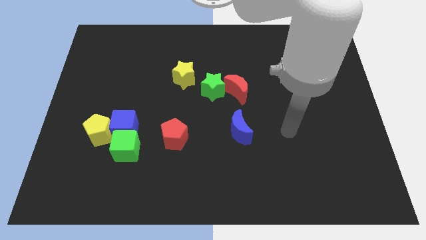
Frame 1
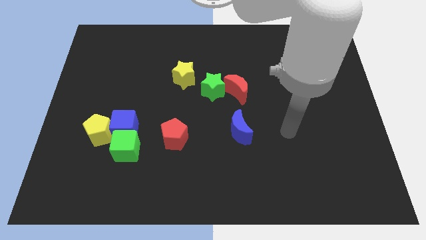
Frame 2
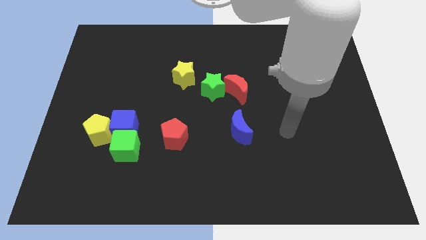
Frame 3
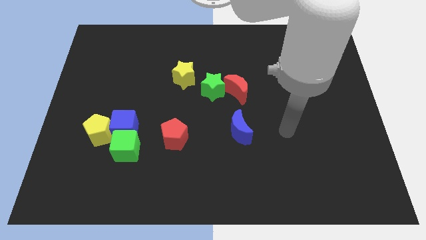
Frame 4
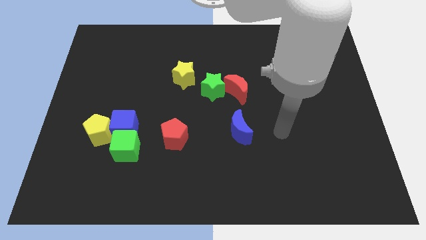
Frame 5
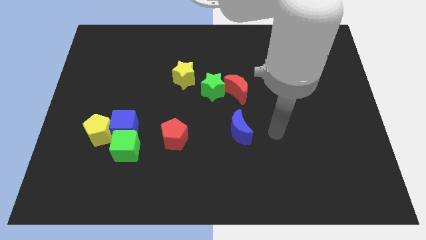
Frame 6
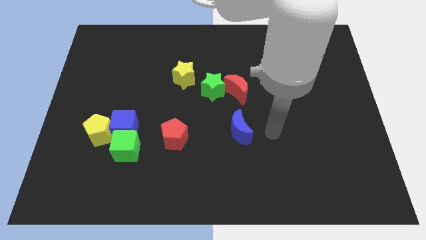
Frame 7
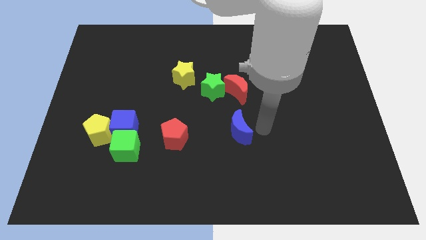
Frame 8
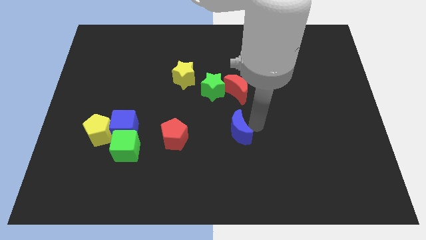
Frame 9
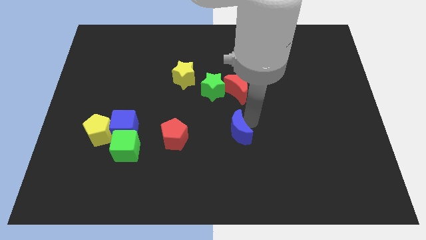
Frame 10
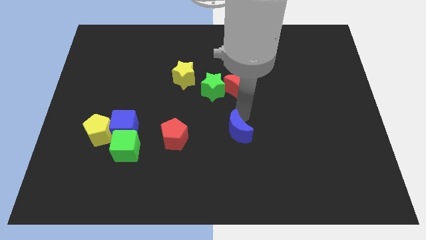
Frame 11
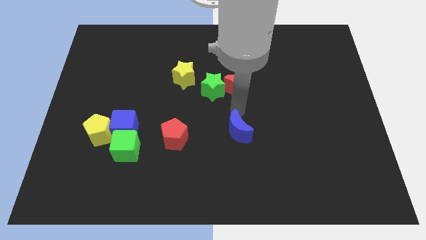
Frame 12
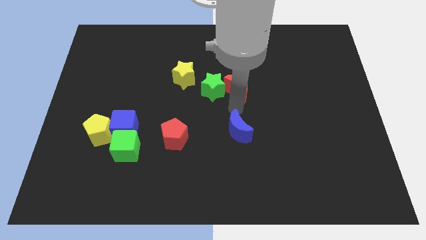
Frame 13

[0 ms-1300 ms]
push your arm in between the red moon and blue moon

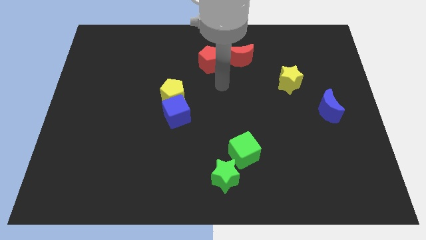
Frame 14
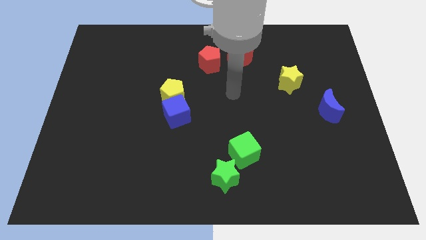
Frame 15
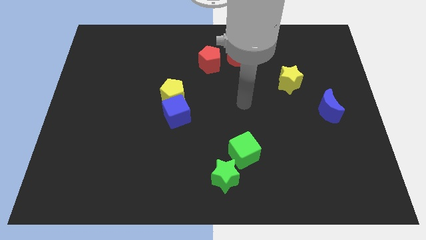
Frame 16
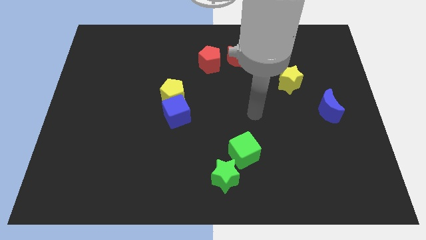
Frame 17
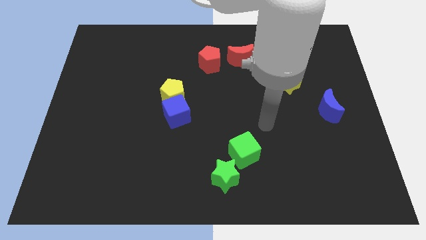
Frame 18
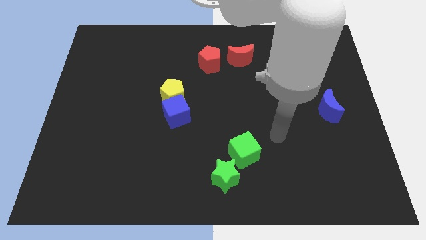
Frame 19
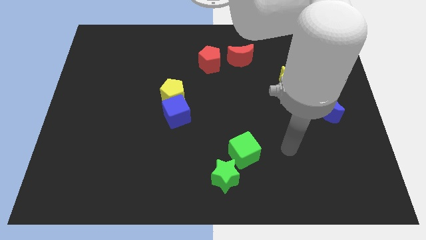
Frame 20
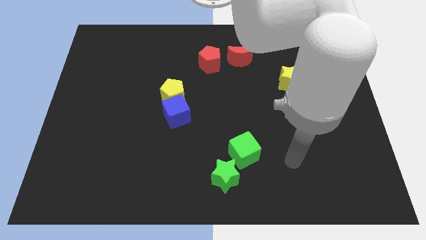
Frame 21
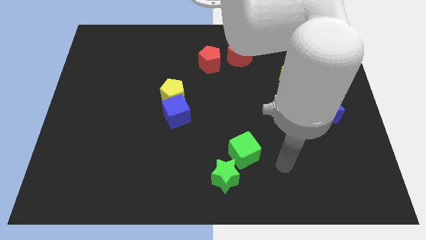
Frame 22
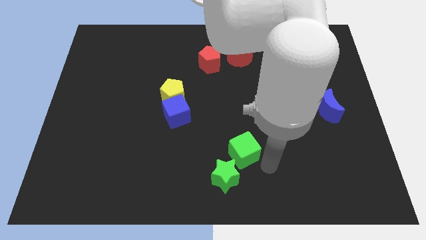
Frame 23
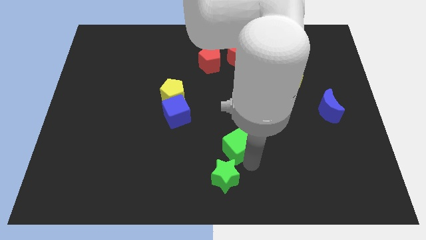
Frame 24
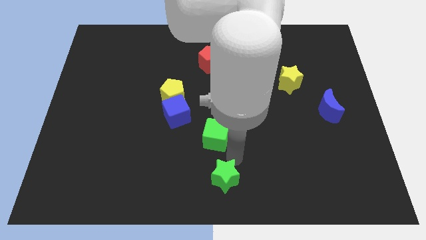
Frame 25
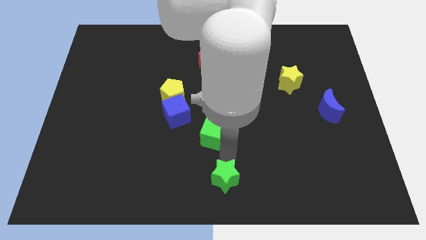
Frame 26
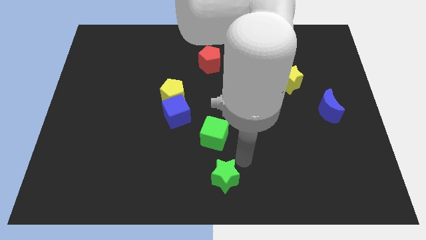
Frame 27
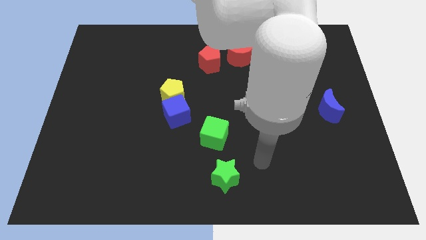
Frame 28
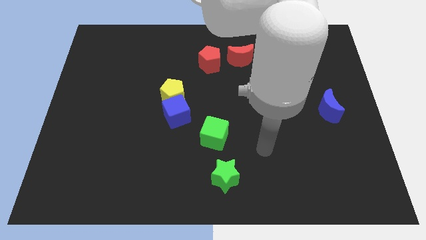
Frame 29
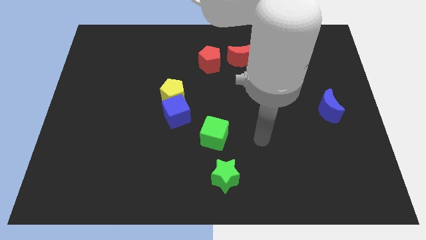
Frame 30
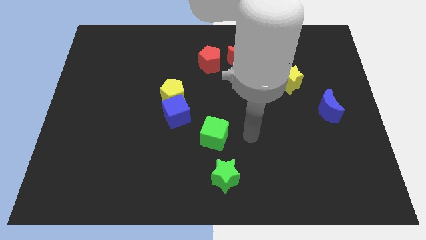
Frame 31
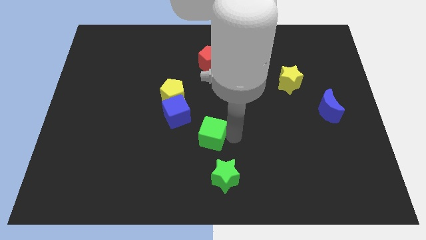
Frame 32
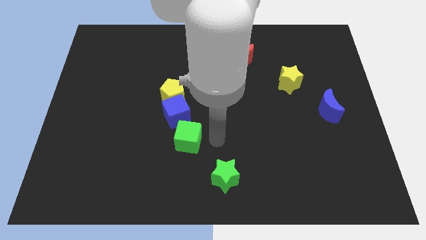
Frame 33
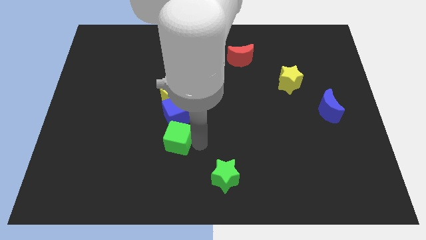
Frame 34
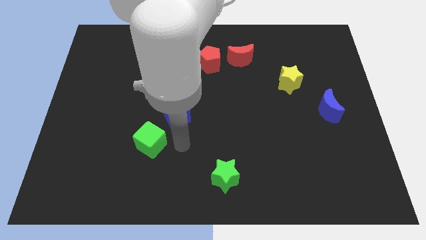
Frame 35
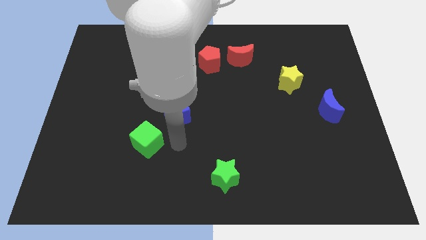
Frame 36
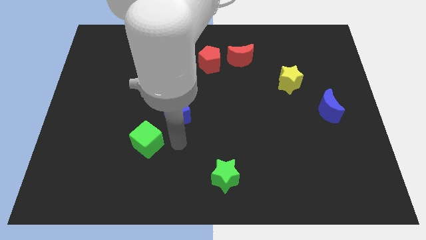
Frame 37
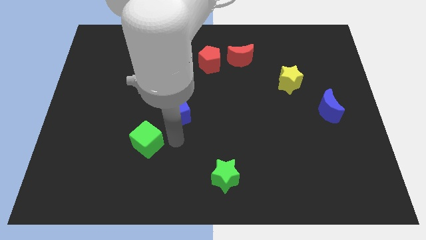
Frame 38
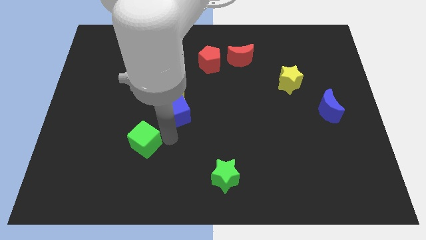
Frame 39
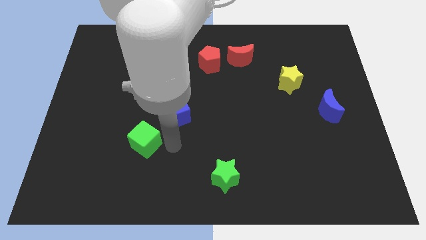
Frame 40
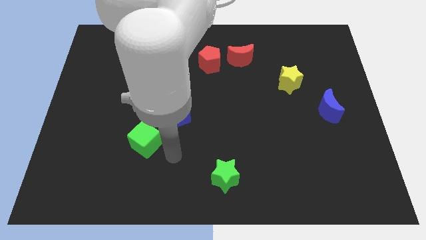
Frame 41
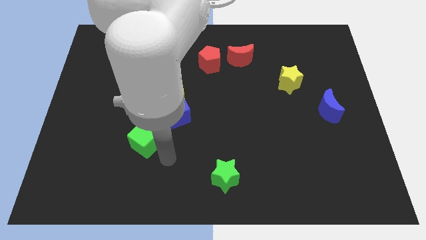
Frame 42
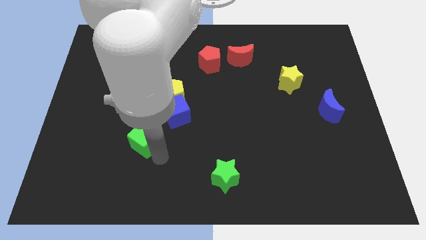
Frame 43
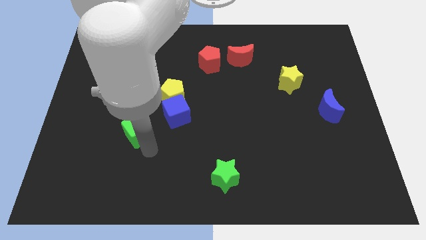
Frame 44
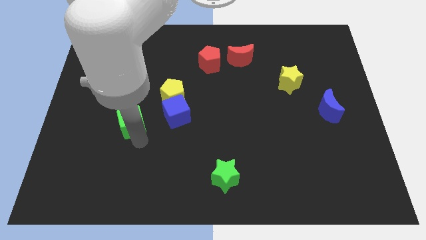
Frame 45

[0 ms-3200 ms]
put the green cube to the left of the blue cube

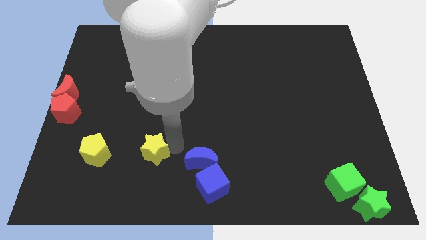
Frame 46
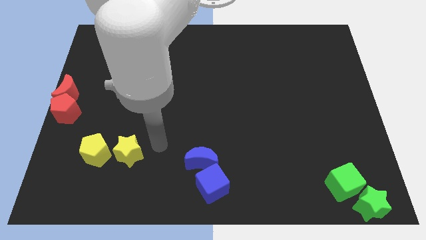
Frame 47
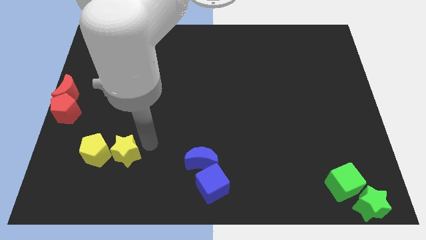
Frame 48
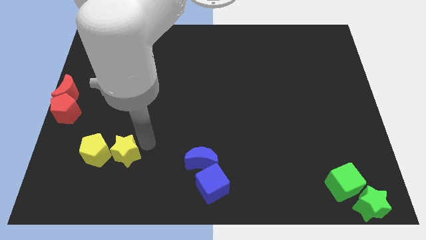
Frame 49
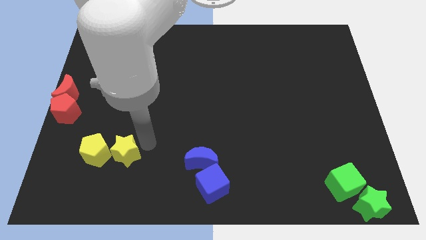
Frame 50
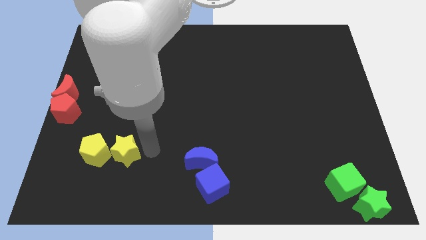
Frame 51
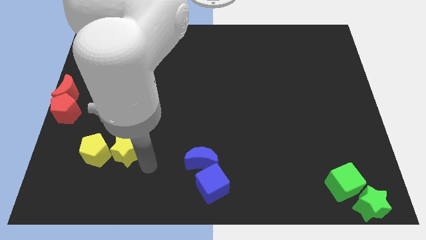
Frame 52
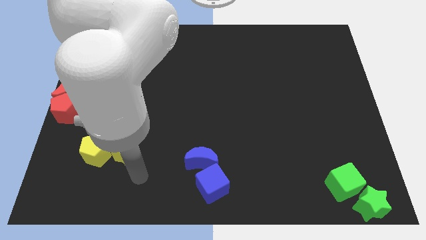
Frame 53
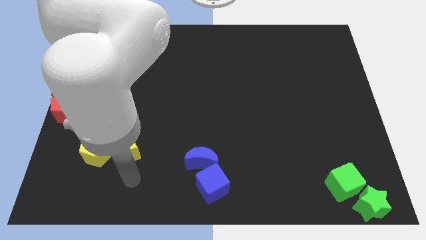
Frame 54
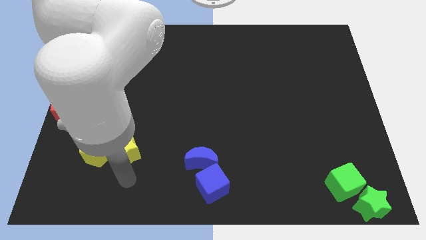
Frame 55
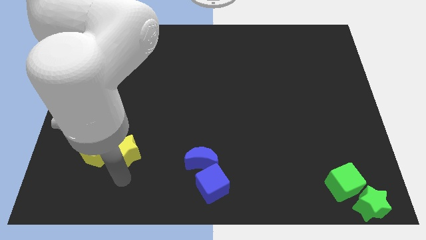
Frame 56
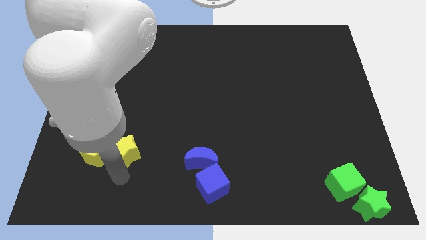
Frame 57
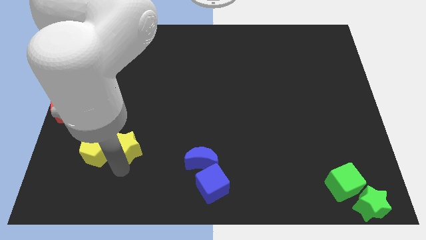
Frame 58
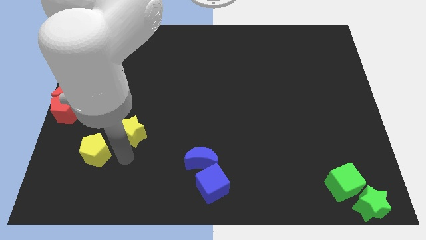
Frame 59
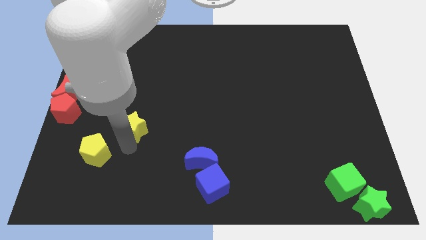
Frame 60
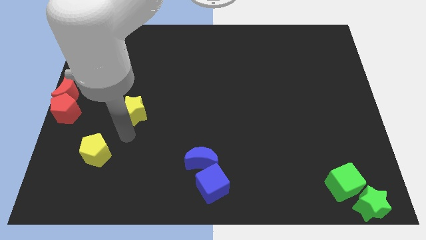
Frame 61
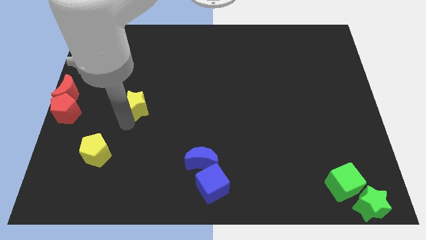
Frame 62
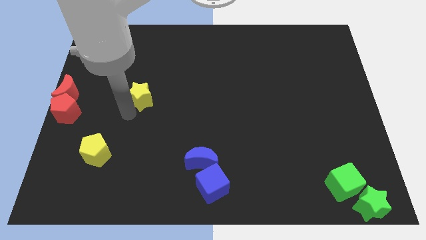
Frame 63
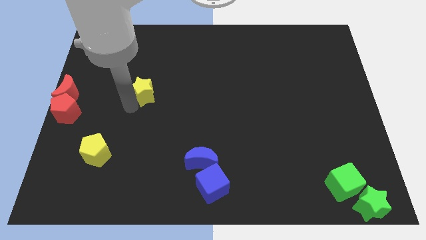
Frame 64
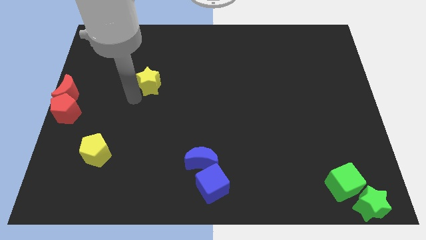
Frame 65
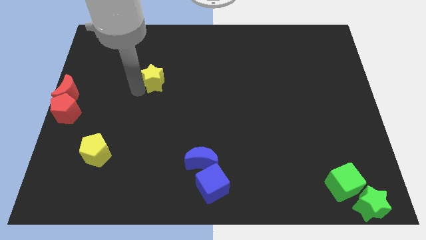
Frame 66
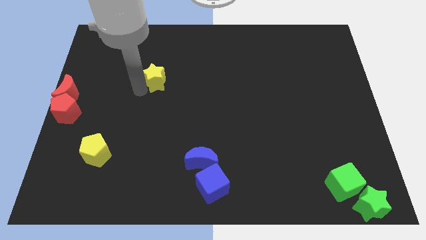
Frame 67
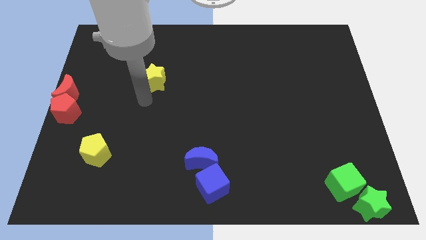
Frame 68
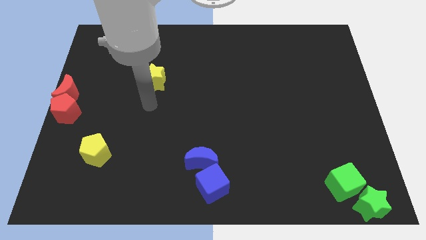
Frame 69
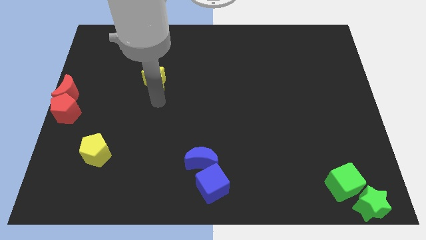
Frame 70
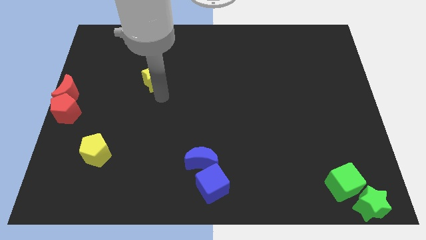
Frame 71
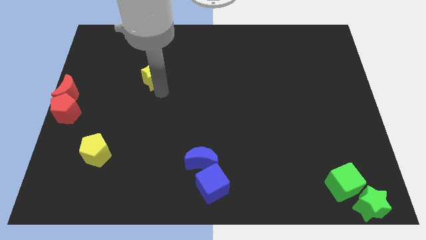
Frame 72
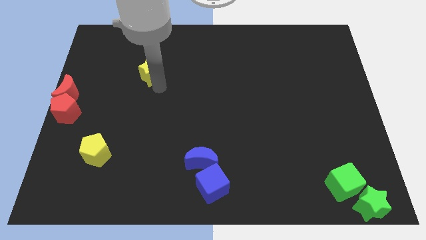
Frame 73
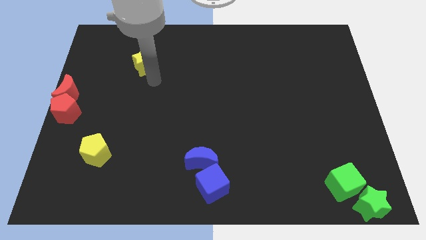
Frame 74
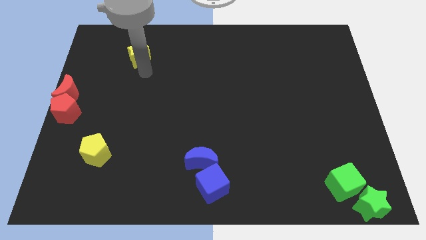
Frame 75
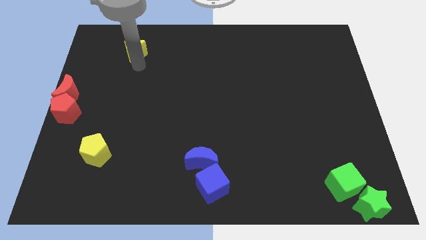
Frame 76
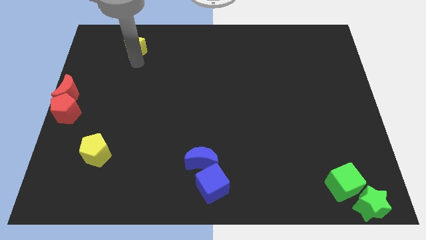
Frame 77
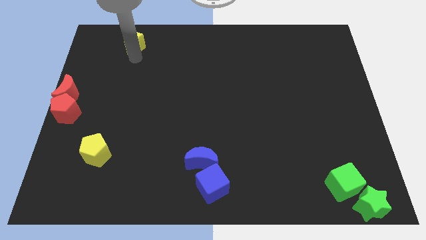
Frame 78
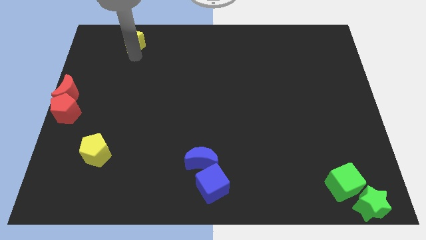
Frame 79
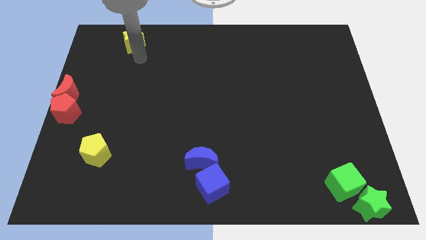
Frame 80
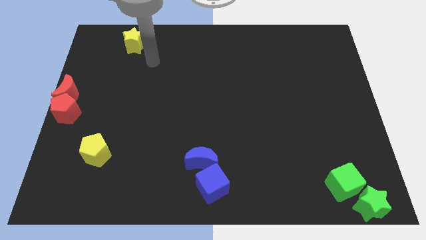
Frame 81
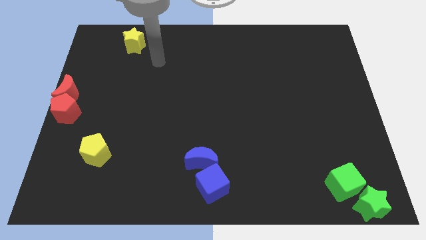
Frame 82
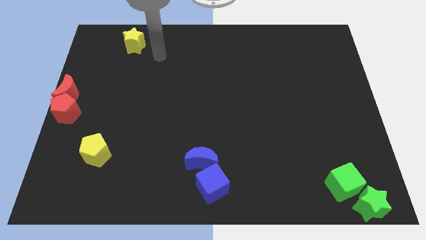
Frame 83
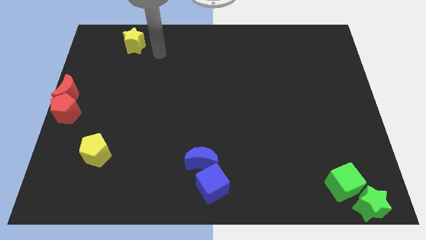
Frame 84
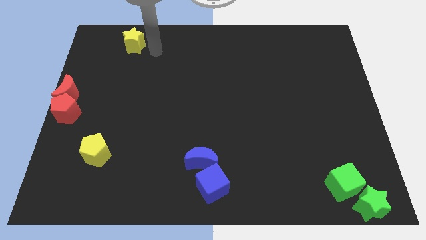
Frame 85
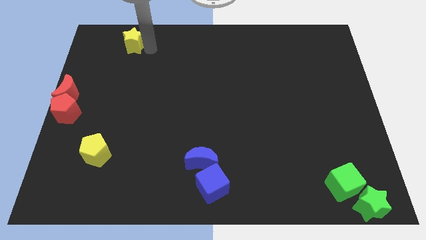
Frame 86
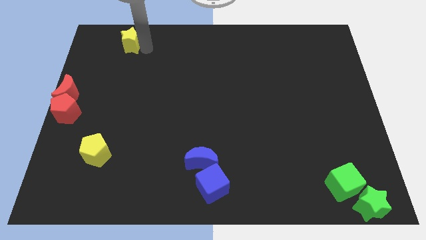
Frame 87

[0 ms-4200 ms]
move the yellow star to the top left

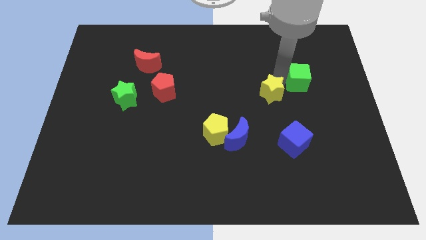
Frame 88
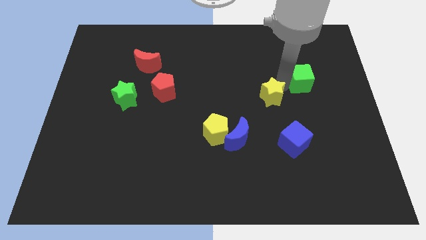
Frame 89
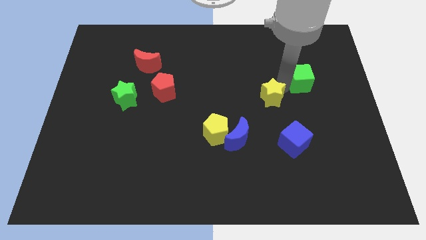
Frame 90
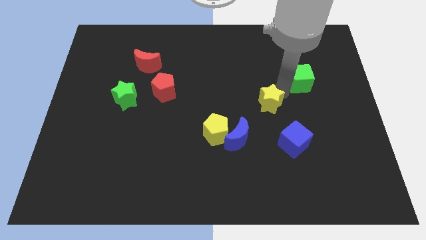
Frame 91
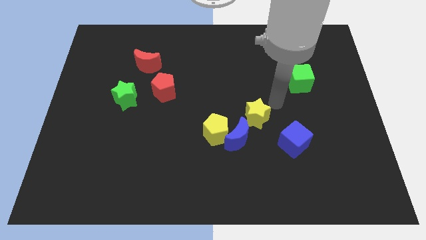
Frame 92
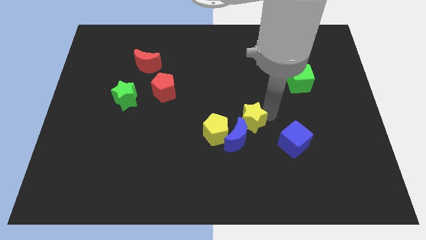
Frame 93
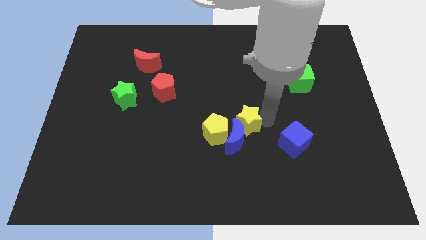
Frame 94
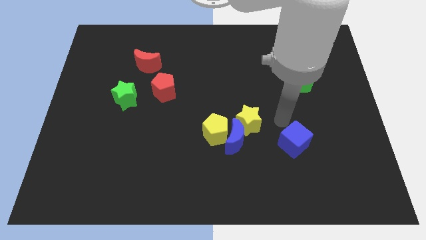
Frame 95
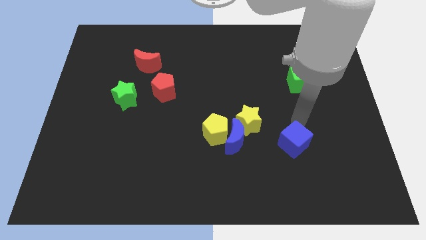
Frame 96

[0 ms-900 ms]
push the yellow star into the blue crescent
